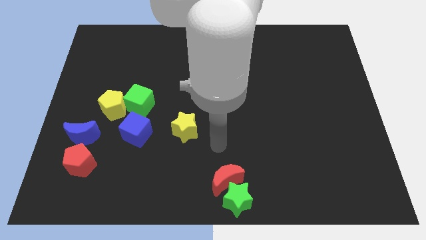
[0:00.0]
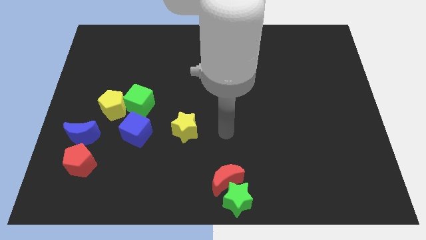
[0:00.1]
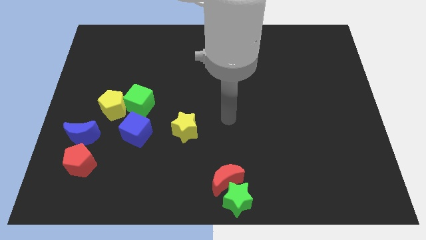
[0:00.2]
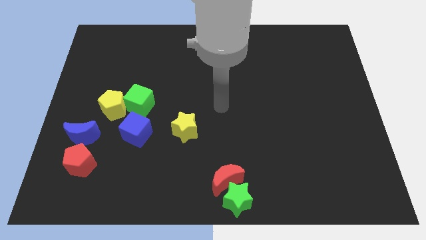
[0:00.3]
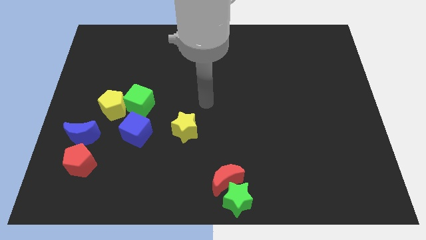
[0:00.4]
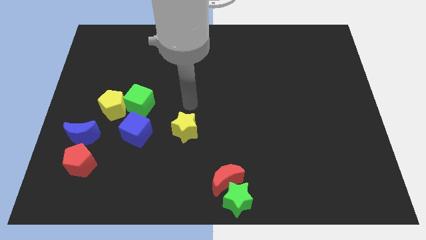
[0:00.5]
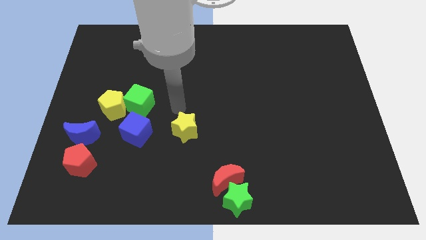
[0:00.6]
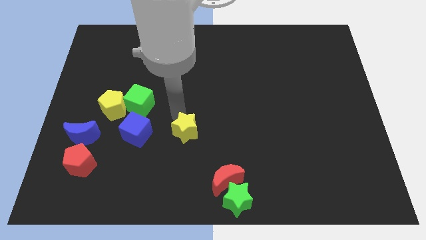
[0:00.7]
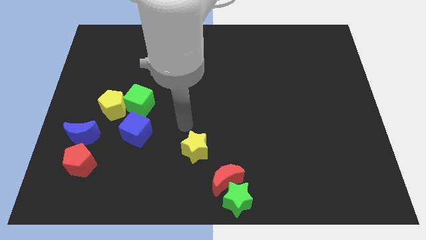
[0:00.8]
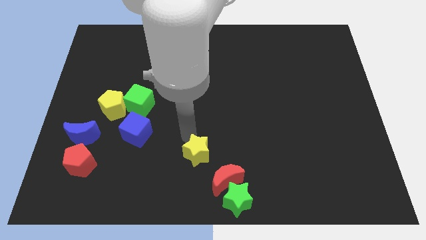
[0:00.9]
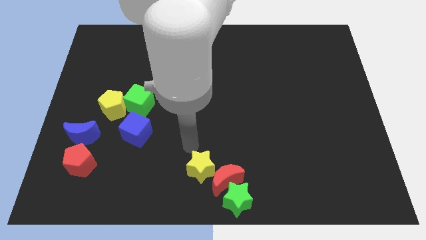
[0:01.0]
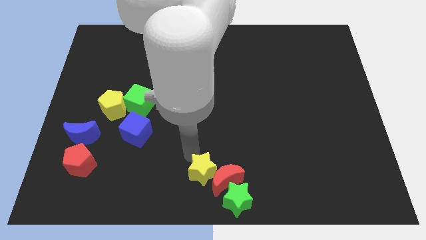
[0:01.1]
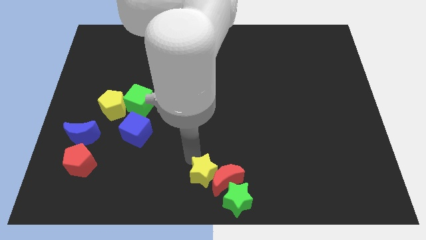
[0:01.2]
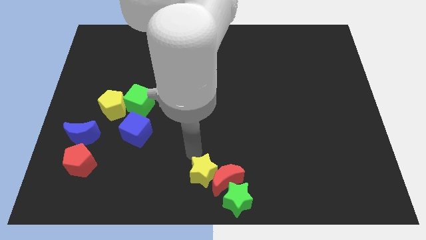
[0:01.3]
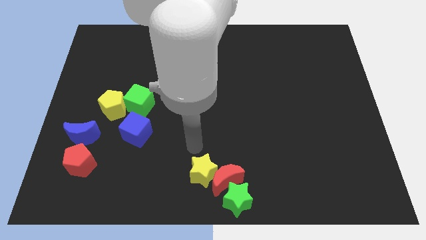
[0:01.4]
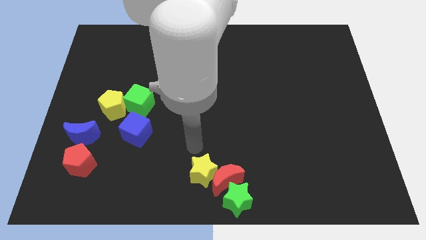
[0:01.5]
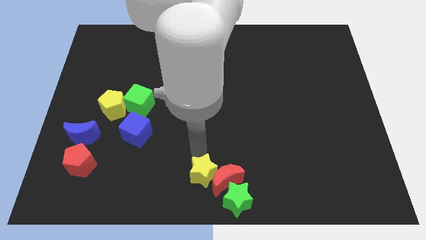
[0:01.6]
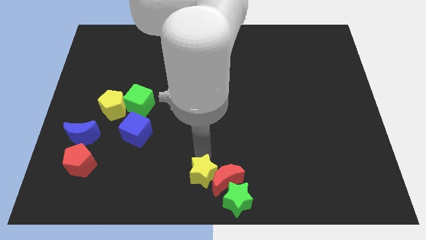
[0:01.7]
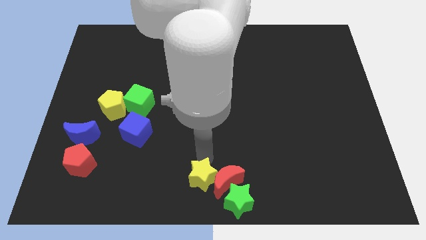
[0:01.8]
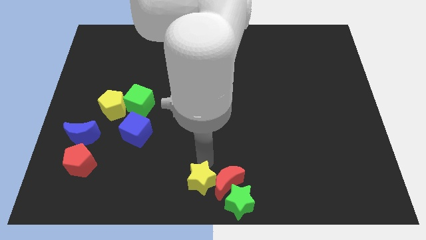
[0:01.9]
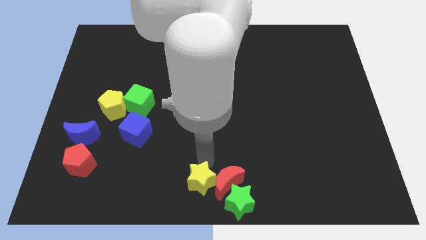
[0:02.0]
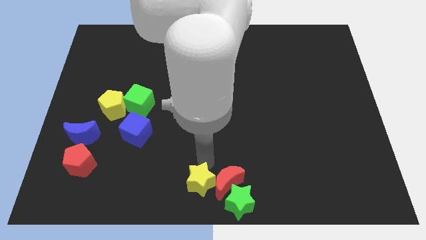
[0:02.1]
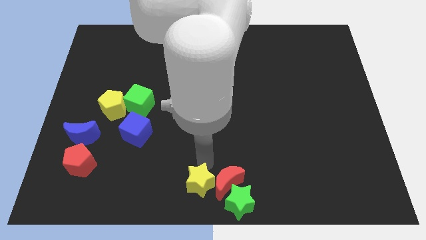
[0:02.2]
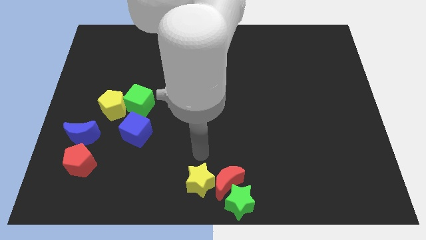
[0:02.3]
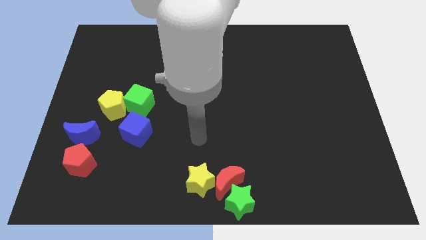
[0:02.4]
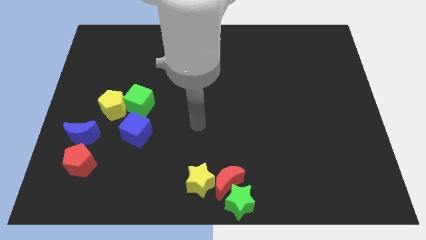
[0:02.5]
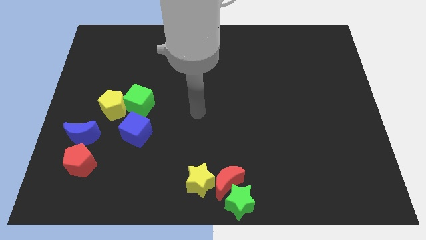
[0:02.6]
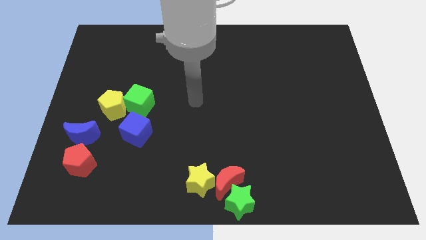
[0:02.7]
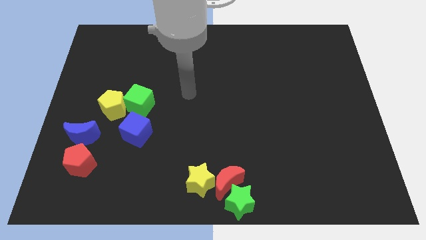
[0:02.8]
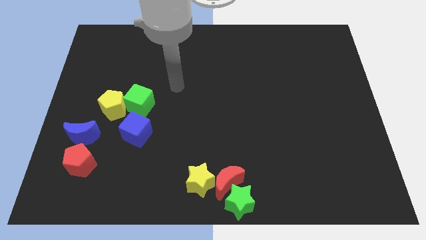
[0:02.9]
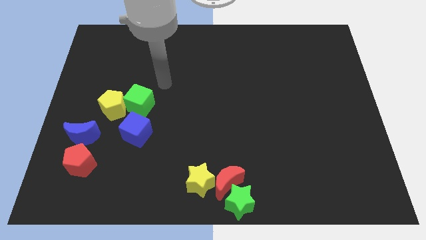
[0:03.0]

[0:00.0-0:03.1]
place the yellow star towards the left of the red crescent

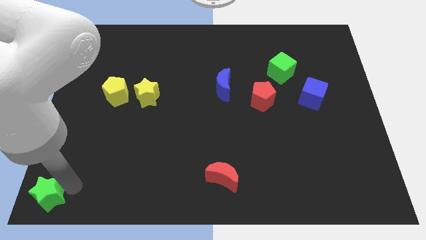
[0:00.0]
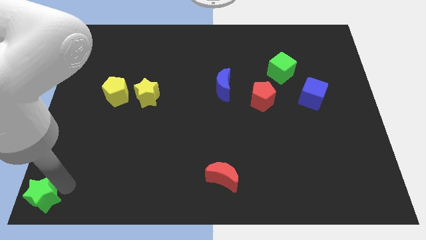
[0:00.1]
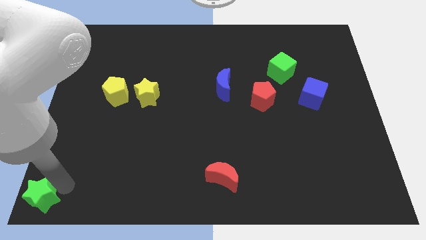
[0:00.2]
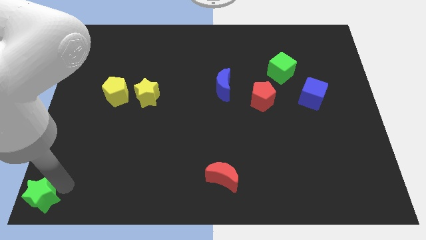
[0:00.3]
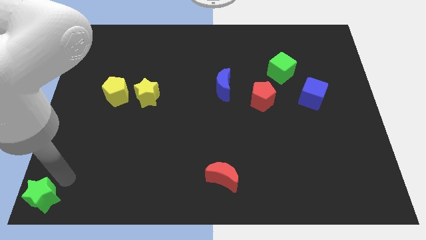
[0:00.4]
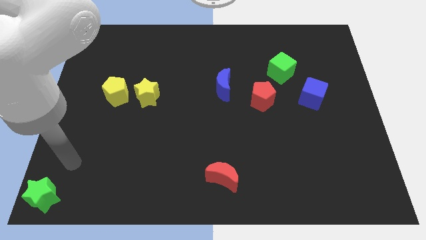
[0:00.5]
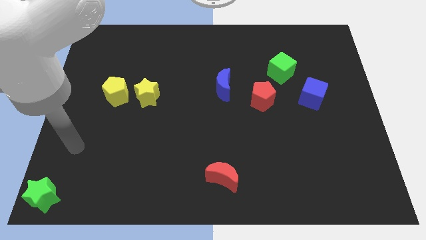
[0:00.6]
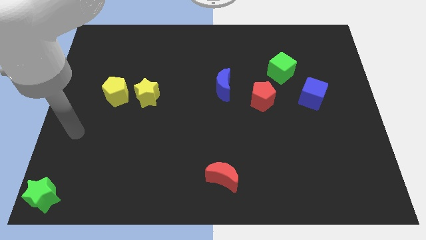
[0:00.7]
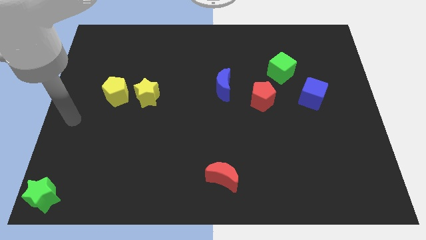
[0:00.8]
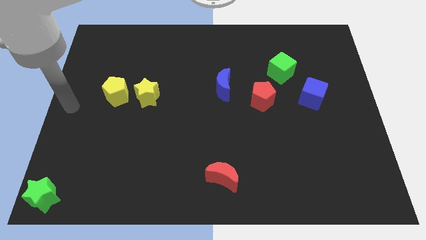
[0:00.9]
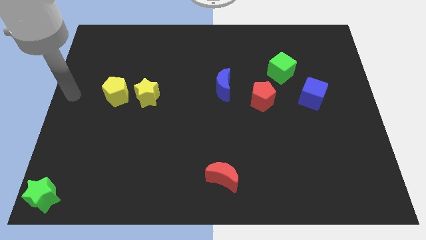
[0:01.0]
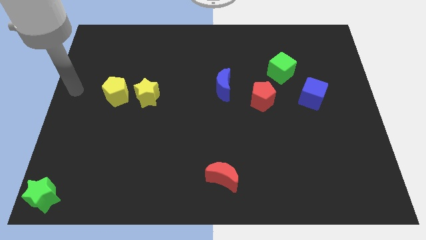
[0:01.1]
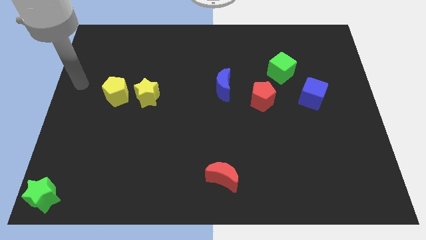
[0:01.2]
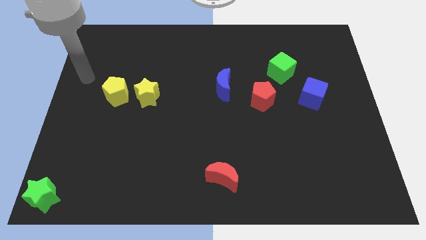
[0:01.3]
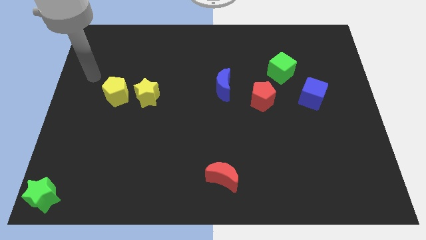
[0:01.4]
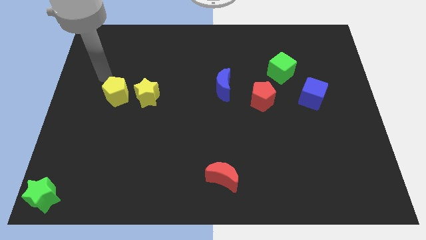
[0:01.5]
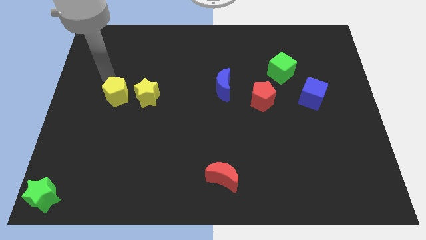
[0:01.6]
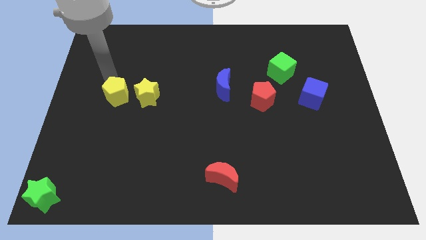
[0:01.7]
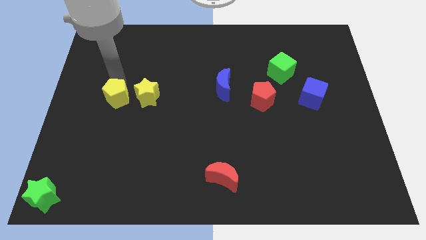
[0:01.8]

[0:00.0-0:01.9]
place your arm above the yellow pentagon

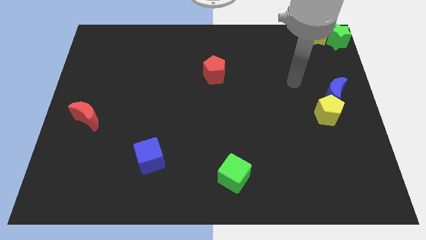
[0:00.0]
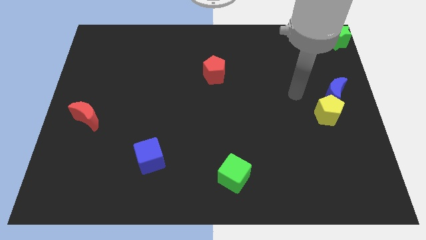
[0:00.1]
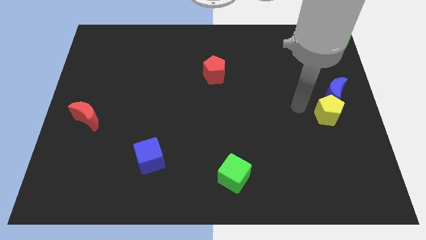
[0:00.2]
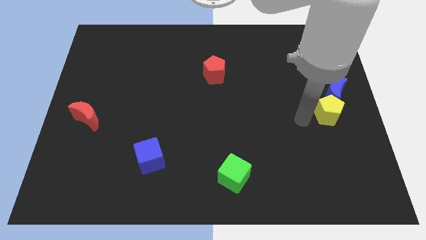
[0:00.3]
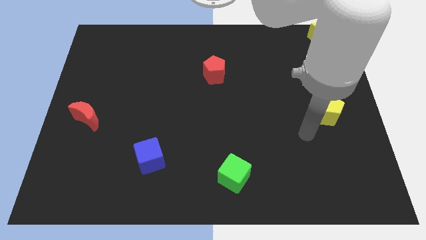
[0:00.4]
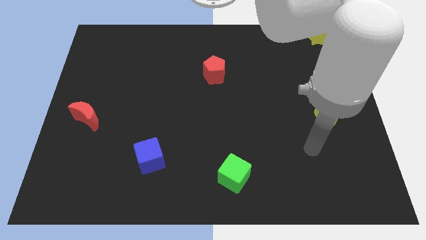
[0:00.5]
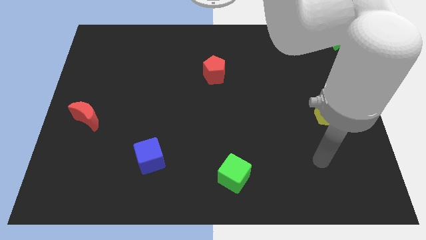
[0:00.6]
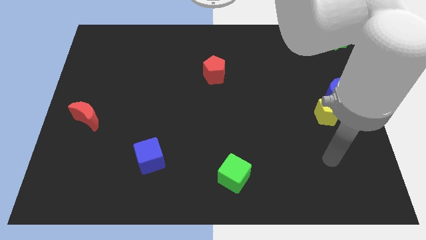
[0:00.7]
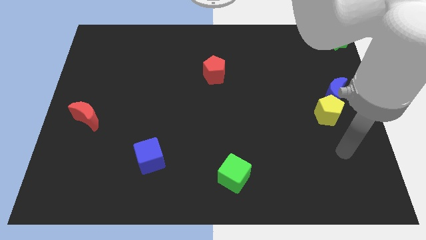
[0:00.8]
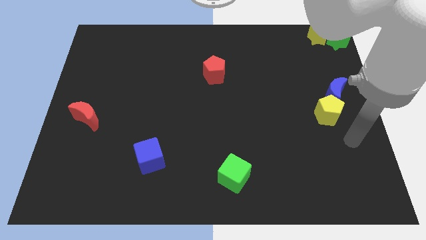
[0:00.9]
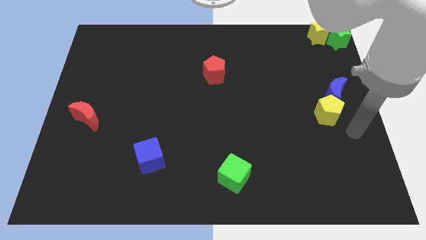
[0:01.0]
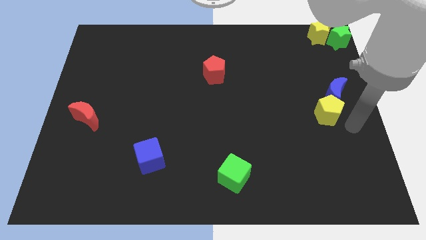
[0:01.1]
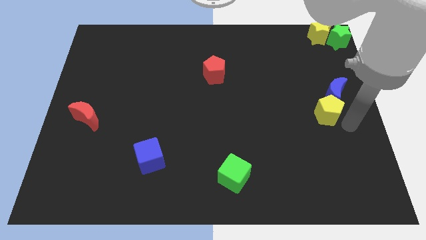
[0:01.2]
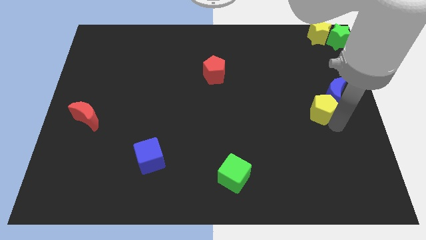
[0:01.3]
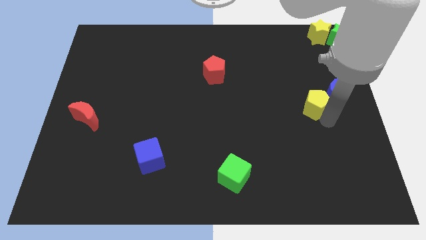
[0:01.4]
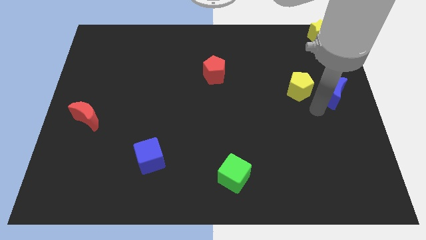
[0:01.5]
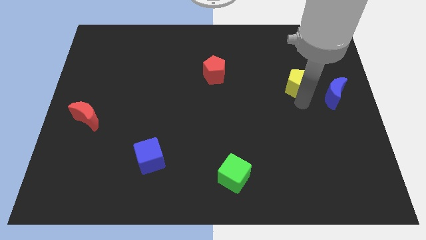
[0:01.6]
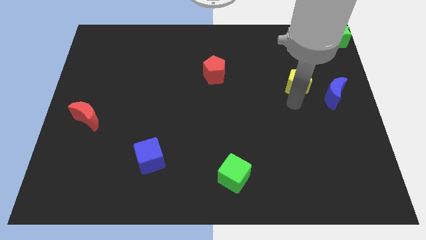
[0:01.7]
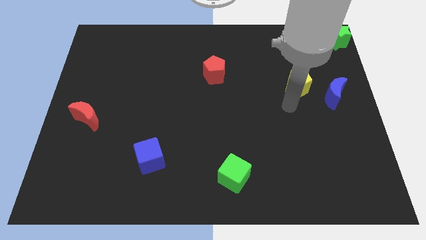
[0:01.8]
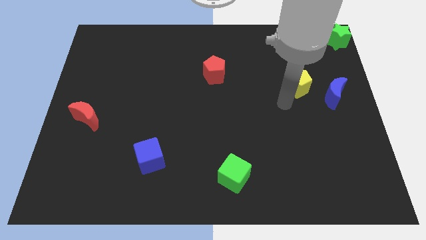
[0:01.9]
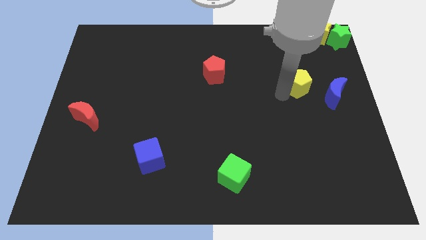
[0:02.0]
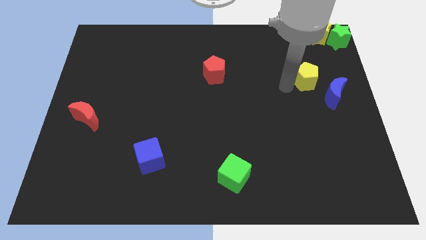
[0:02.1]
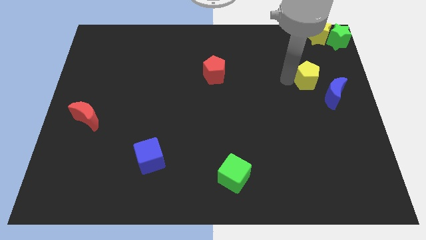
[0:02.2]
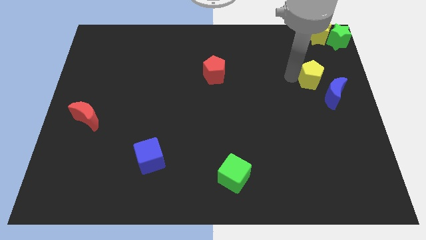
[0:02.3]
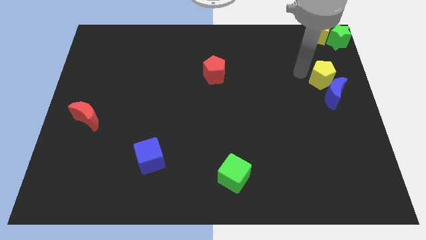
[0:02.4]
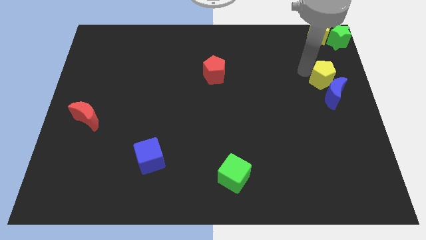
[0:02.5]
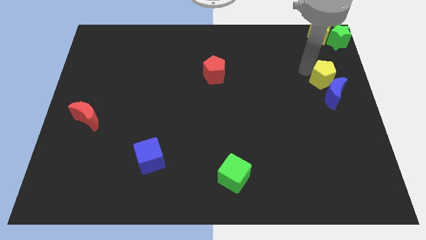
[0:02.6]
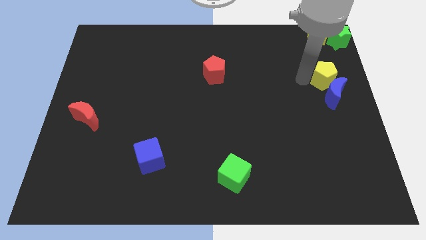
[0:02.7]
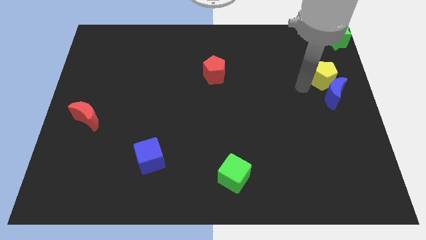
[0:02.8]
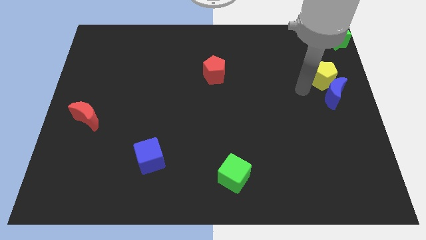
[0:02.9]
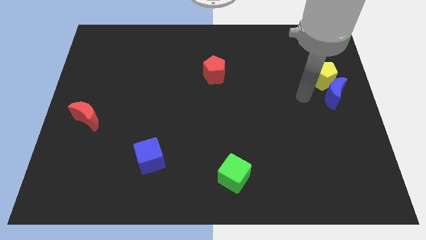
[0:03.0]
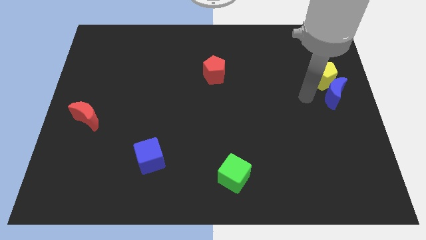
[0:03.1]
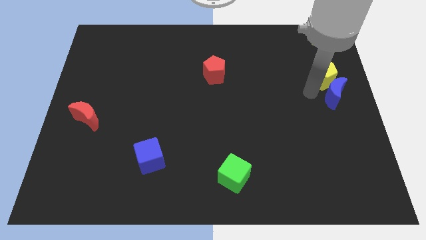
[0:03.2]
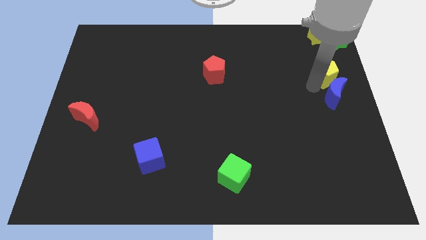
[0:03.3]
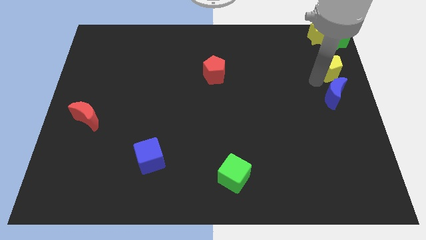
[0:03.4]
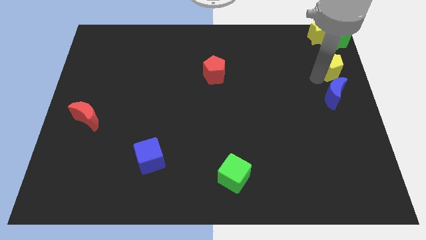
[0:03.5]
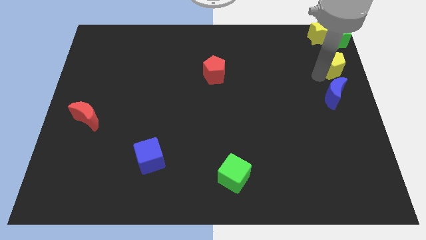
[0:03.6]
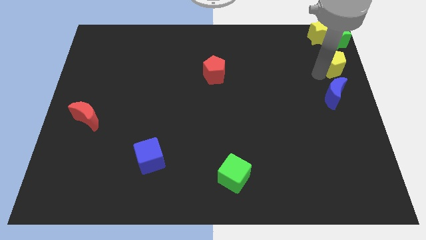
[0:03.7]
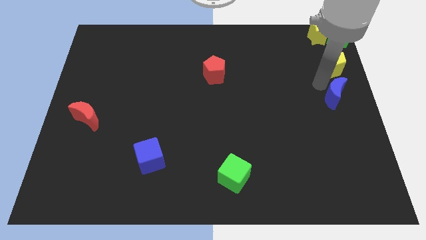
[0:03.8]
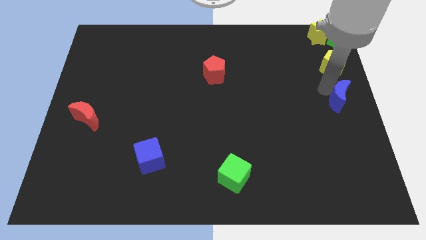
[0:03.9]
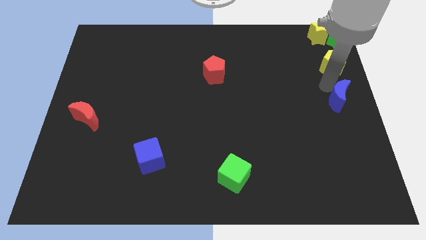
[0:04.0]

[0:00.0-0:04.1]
move the yellow pentagon above the blue crescent
